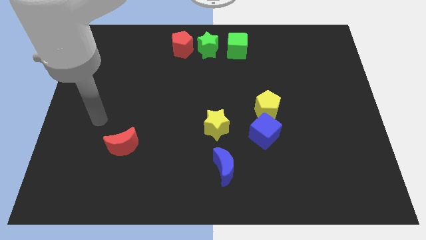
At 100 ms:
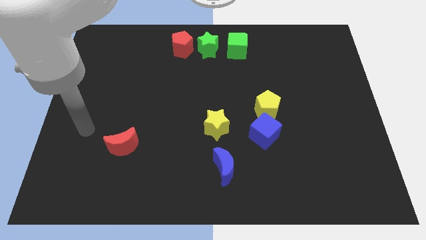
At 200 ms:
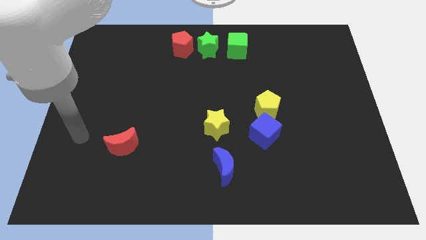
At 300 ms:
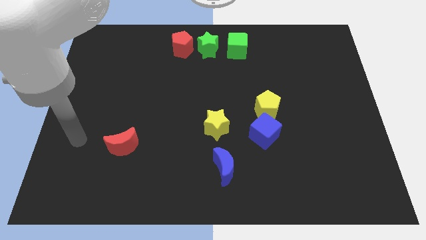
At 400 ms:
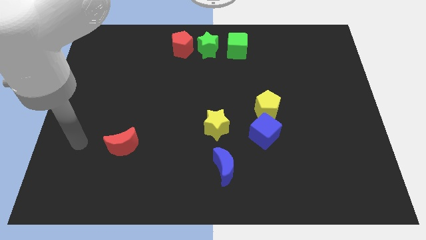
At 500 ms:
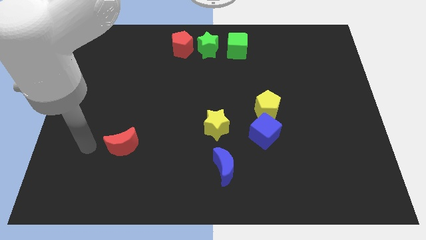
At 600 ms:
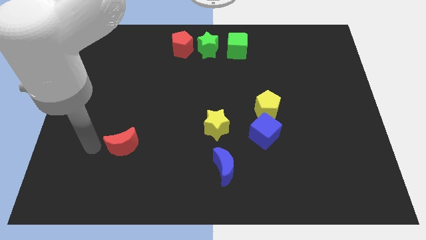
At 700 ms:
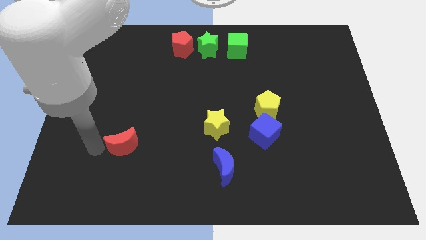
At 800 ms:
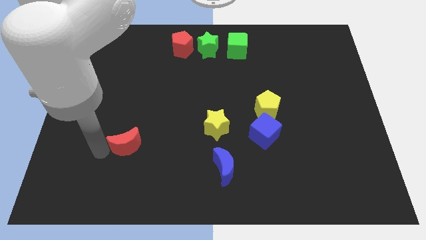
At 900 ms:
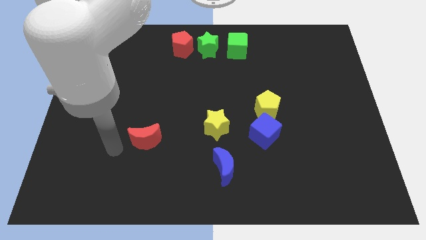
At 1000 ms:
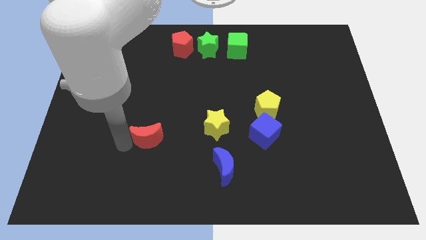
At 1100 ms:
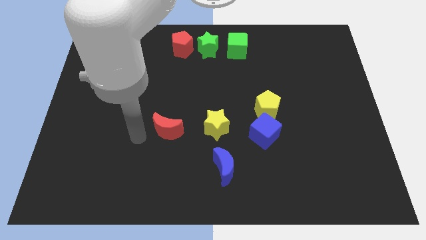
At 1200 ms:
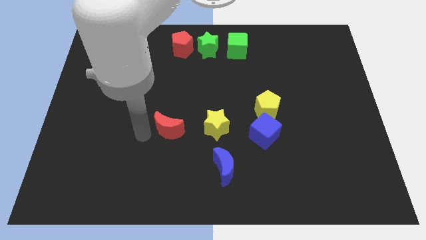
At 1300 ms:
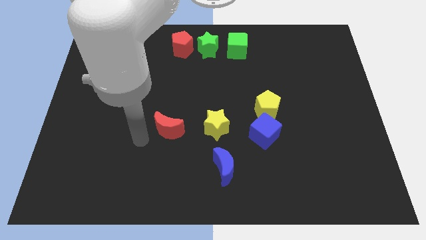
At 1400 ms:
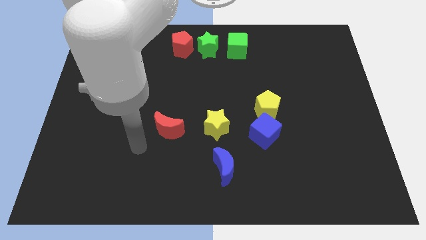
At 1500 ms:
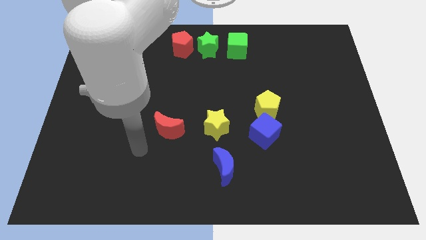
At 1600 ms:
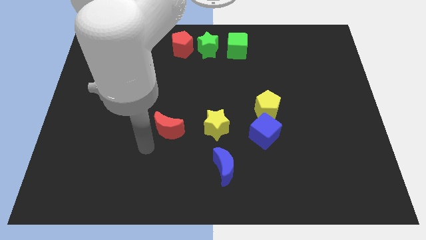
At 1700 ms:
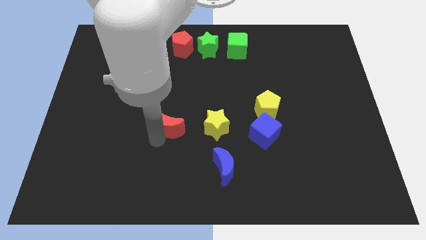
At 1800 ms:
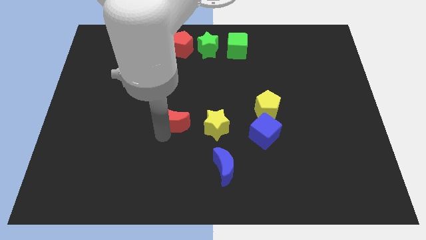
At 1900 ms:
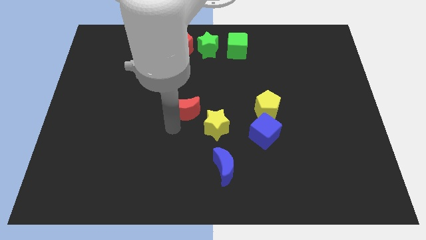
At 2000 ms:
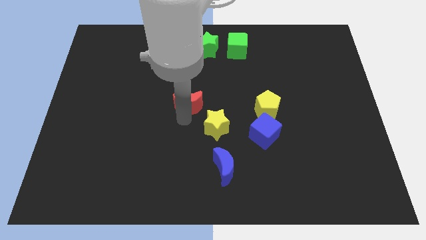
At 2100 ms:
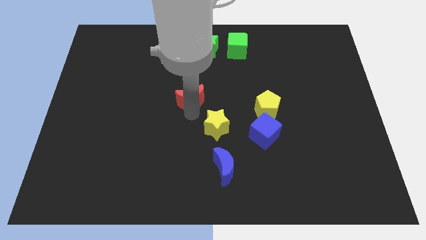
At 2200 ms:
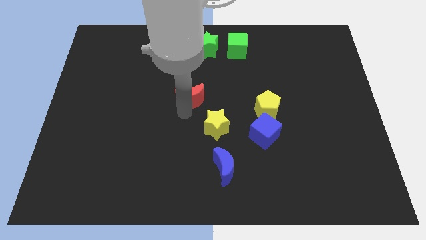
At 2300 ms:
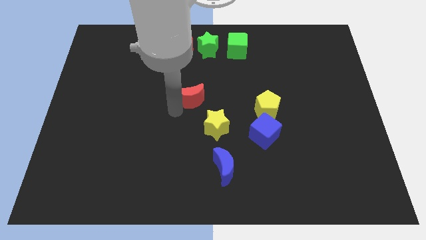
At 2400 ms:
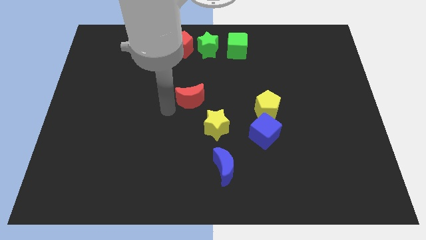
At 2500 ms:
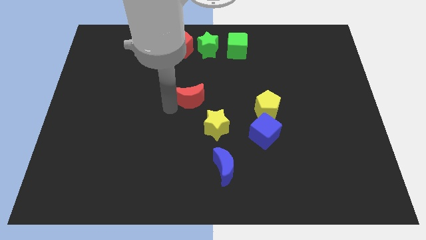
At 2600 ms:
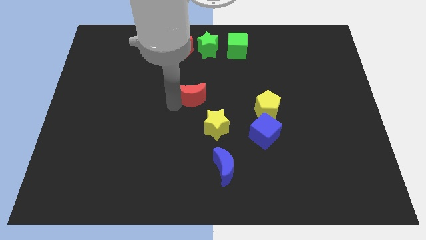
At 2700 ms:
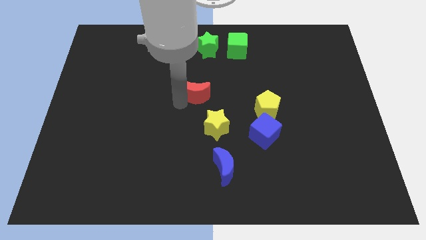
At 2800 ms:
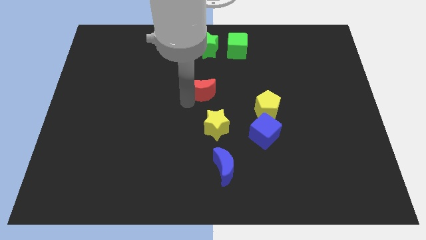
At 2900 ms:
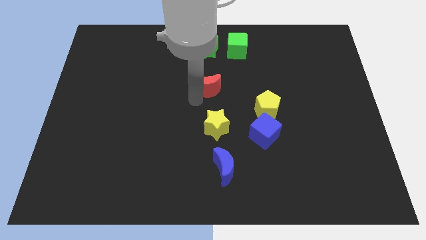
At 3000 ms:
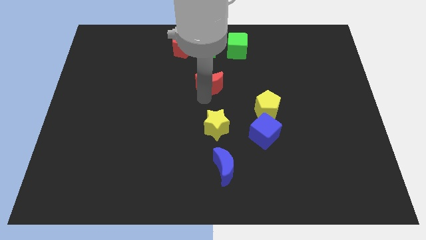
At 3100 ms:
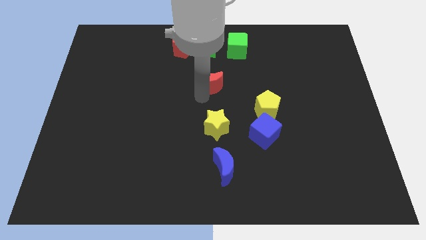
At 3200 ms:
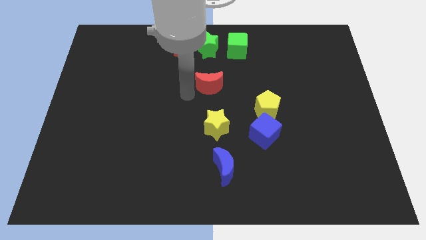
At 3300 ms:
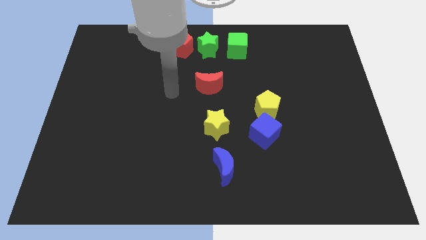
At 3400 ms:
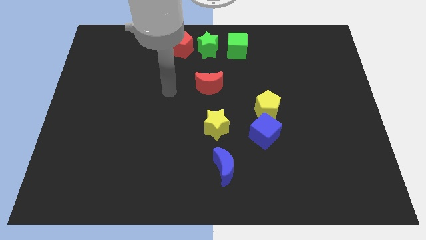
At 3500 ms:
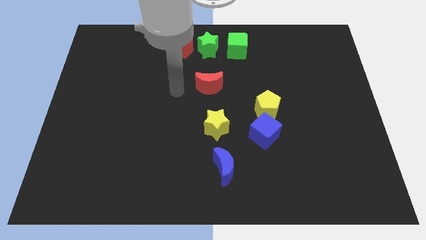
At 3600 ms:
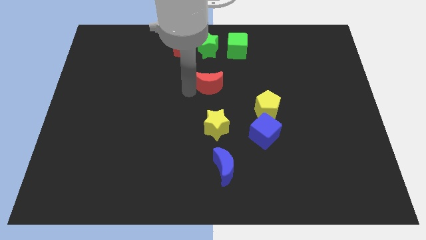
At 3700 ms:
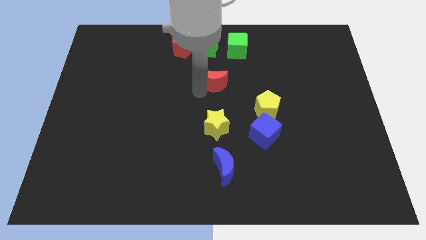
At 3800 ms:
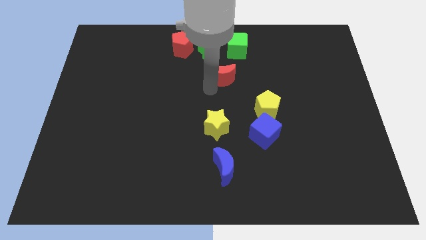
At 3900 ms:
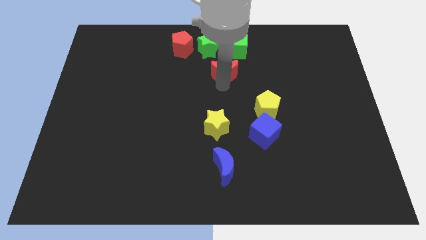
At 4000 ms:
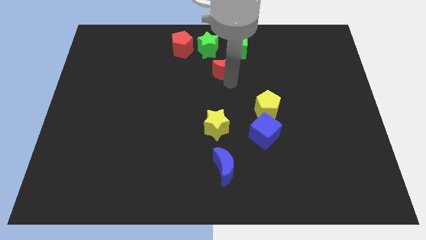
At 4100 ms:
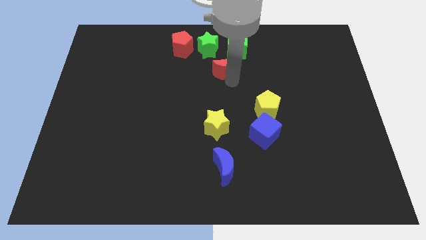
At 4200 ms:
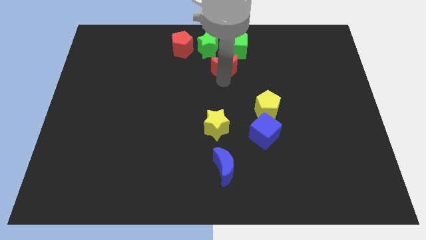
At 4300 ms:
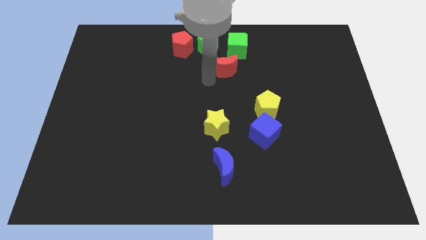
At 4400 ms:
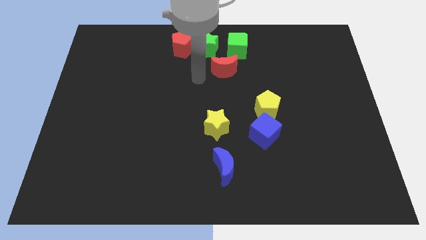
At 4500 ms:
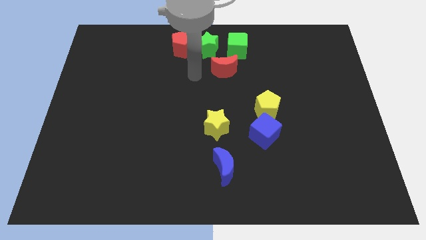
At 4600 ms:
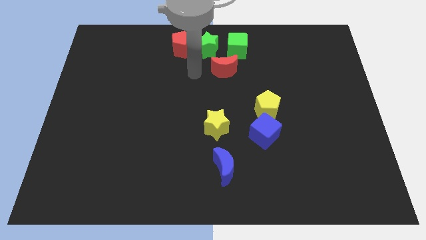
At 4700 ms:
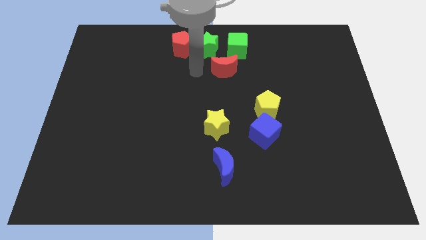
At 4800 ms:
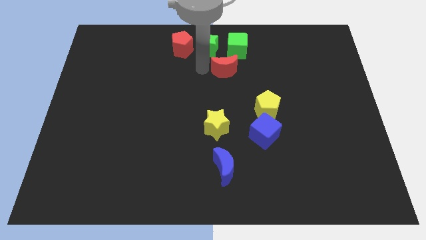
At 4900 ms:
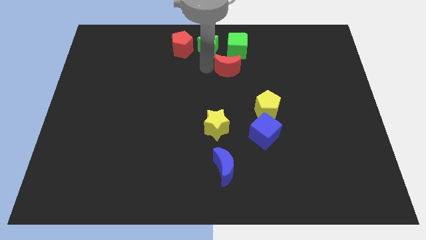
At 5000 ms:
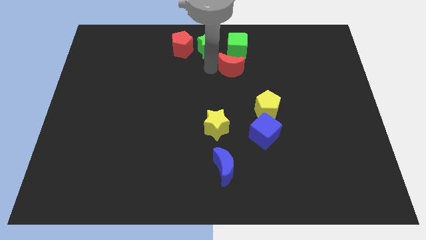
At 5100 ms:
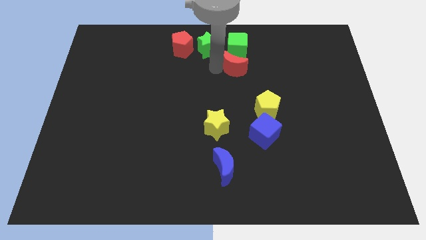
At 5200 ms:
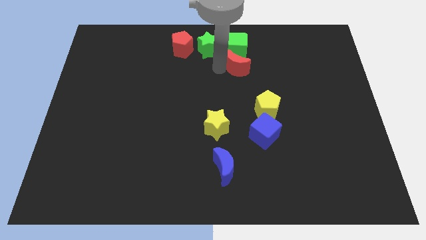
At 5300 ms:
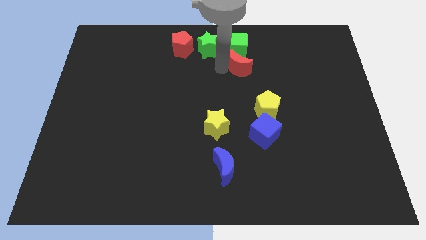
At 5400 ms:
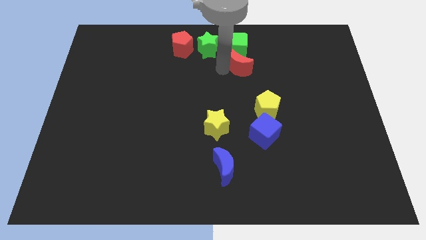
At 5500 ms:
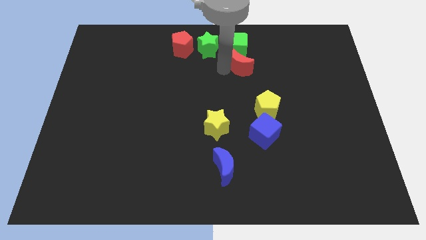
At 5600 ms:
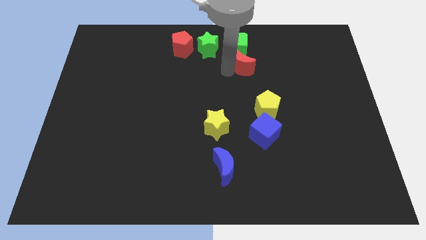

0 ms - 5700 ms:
place the red moon above the green cube

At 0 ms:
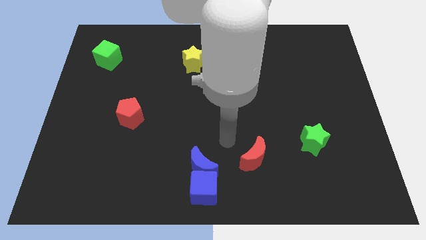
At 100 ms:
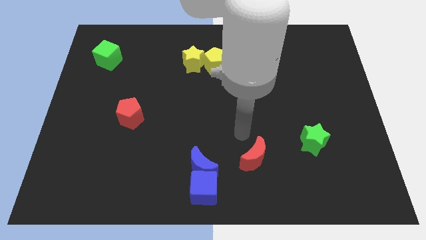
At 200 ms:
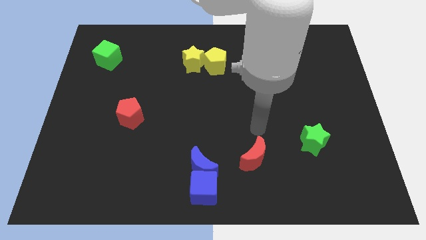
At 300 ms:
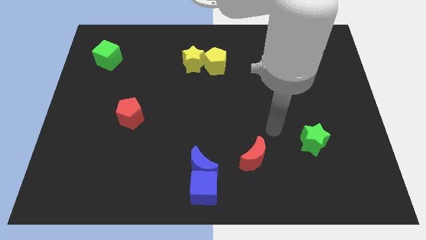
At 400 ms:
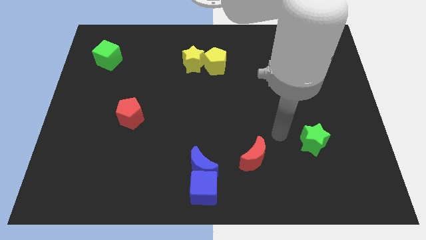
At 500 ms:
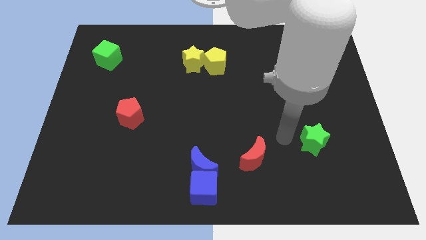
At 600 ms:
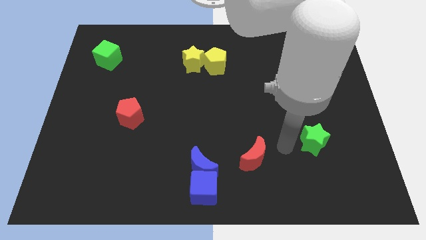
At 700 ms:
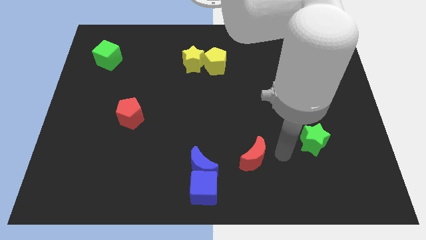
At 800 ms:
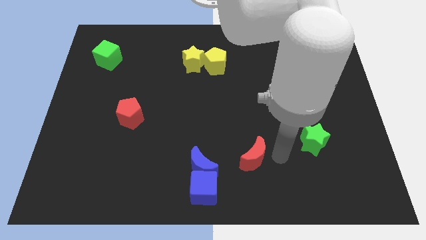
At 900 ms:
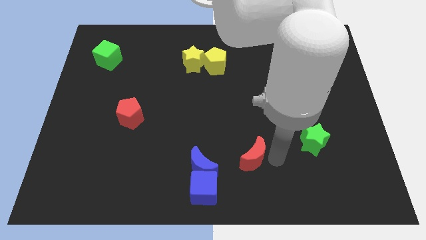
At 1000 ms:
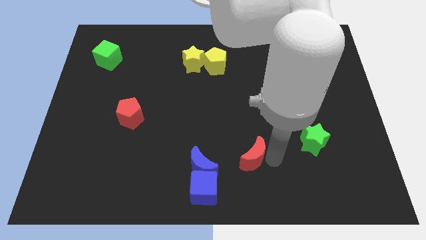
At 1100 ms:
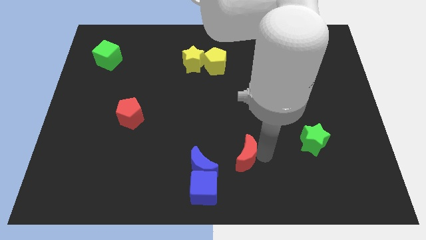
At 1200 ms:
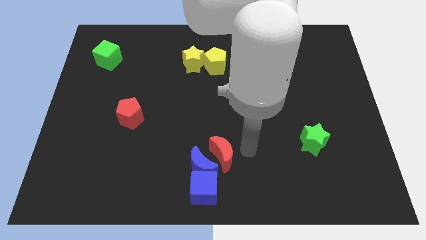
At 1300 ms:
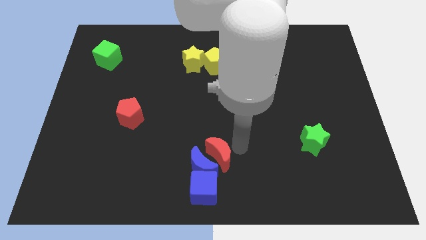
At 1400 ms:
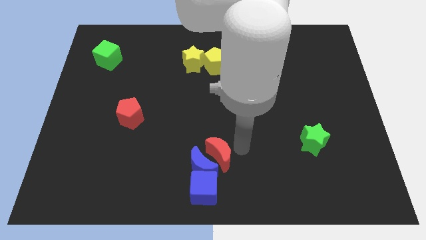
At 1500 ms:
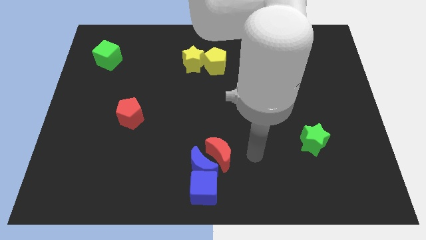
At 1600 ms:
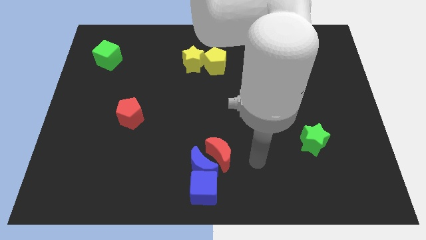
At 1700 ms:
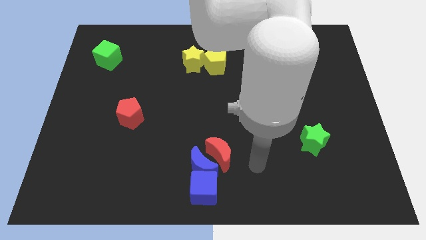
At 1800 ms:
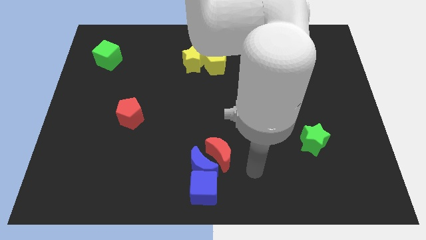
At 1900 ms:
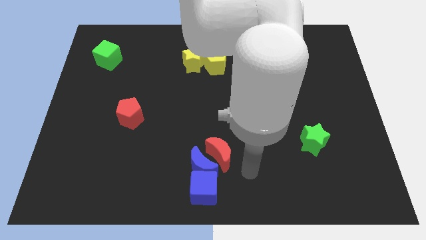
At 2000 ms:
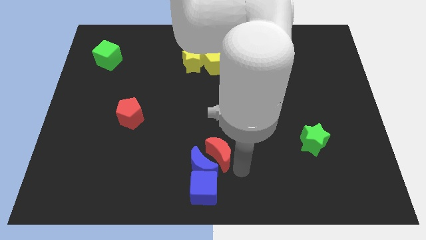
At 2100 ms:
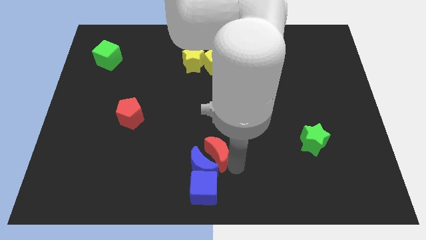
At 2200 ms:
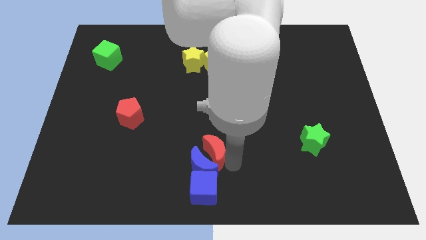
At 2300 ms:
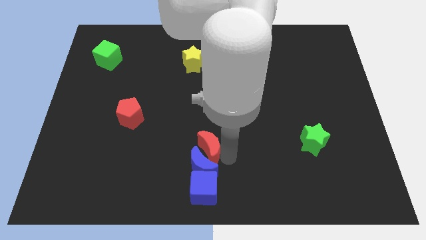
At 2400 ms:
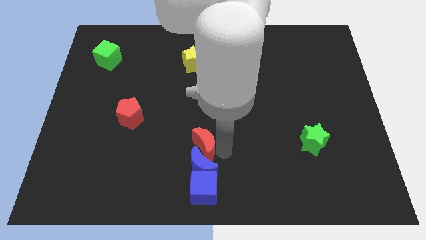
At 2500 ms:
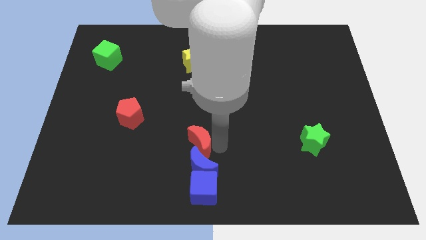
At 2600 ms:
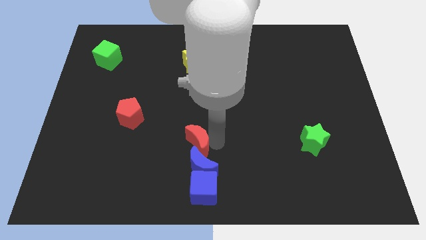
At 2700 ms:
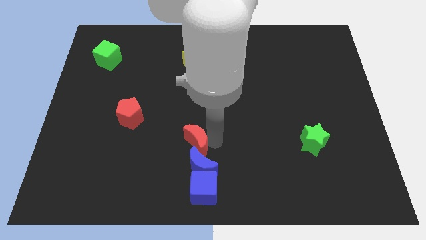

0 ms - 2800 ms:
place the red moon on top of the blue moon

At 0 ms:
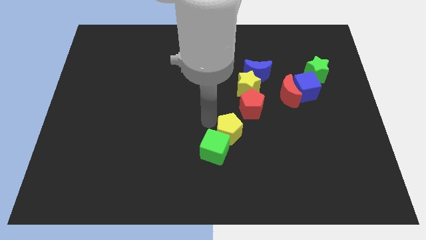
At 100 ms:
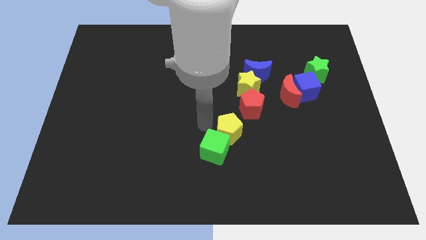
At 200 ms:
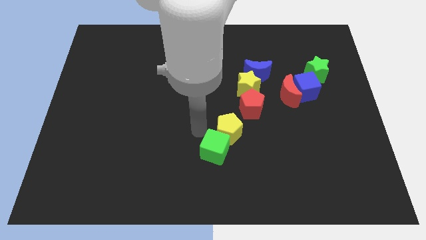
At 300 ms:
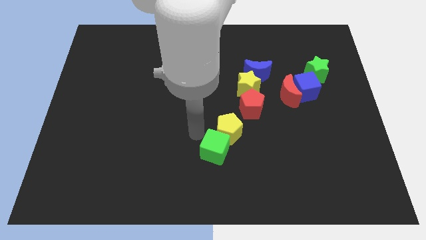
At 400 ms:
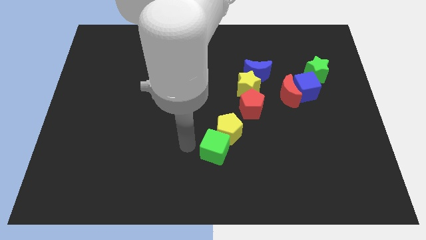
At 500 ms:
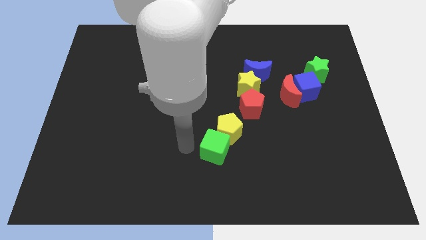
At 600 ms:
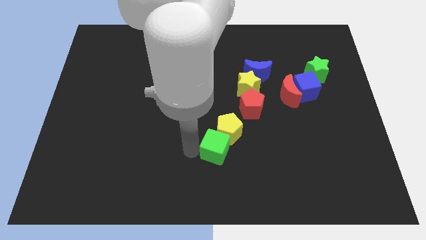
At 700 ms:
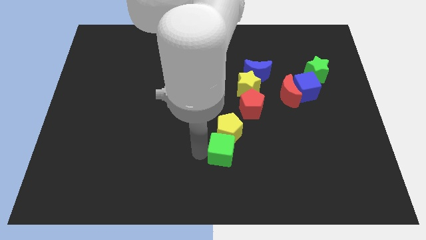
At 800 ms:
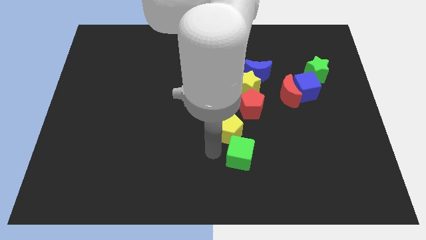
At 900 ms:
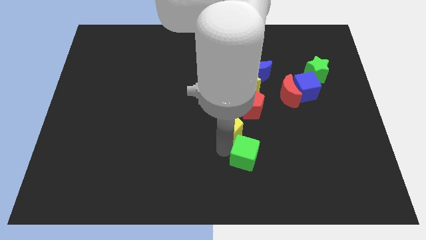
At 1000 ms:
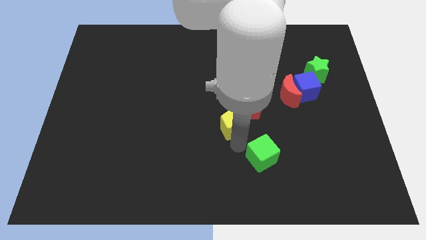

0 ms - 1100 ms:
place your hand in between the green cube and yellow pentagon
